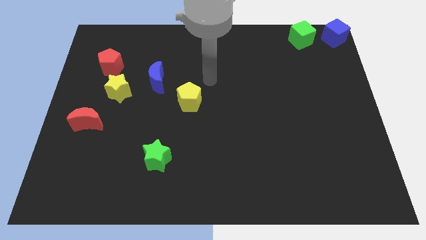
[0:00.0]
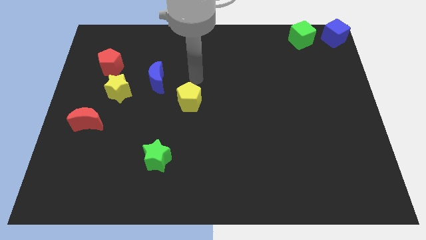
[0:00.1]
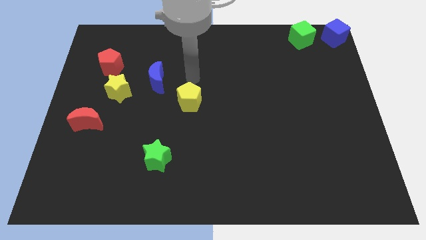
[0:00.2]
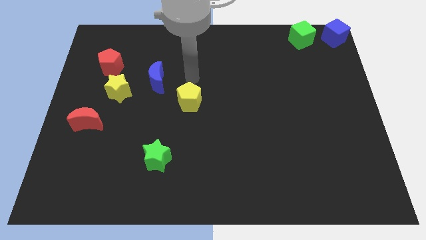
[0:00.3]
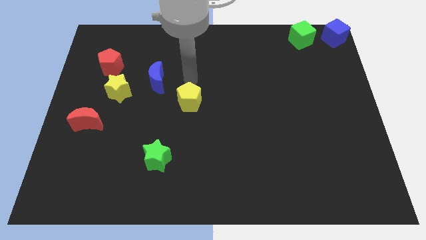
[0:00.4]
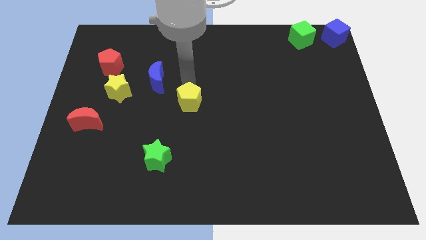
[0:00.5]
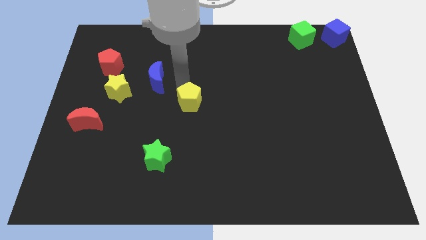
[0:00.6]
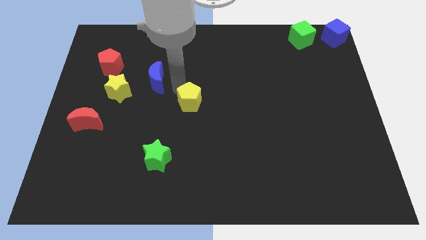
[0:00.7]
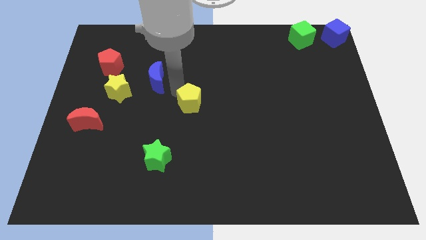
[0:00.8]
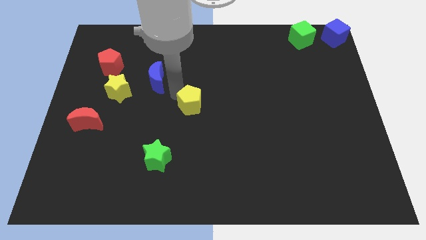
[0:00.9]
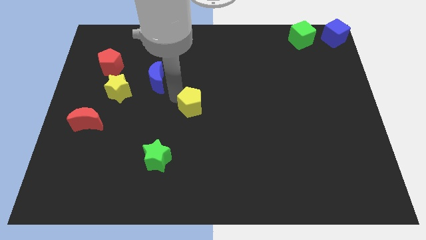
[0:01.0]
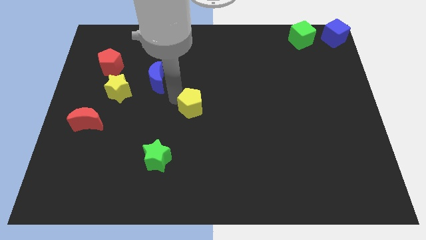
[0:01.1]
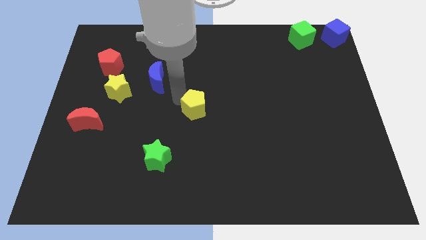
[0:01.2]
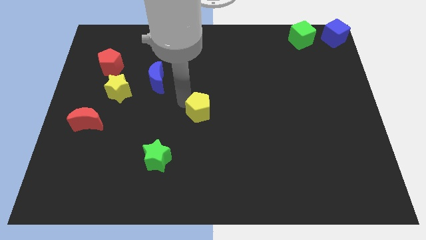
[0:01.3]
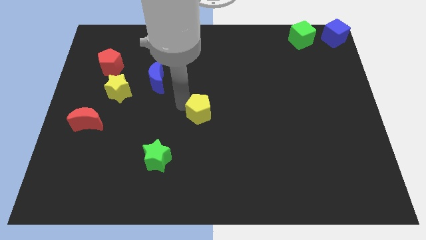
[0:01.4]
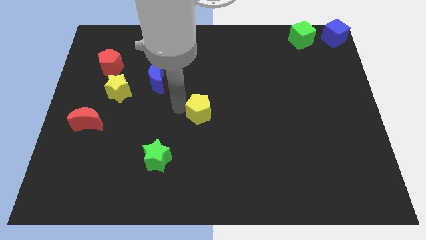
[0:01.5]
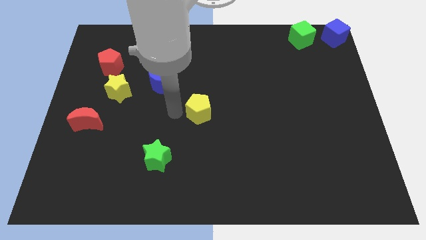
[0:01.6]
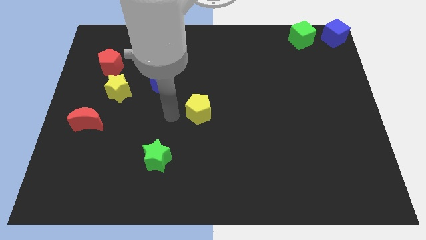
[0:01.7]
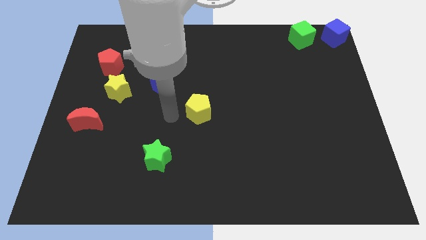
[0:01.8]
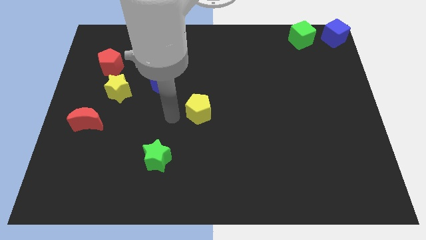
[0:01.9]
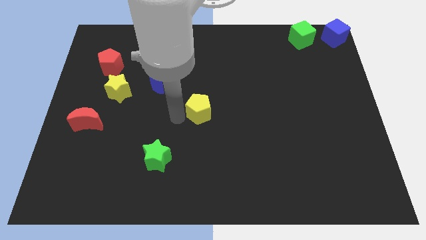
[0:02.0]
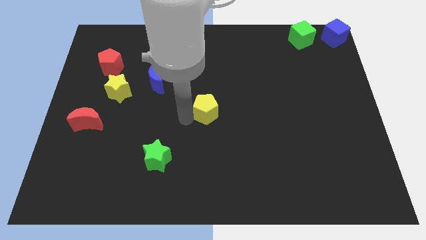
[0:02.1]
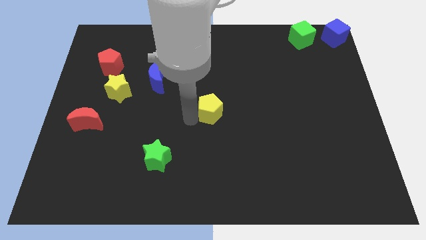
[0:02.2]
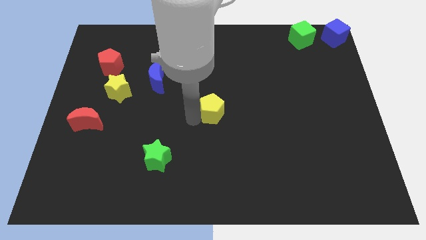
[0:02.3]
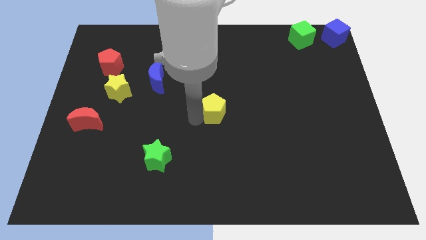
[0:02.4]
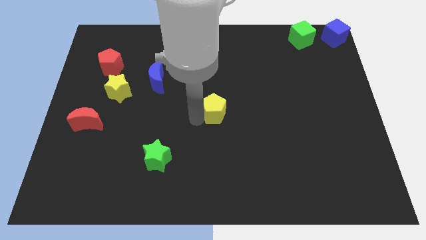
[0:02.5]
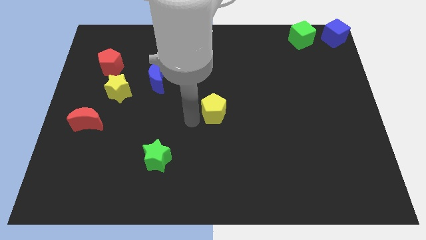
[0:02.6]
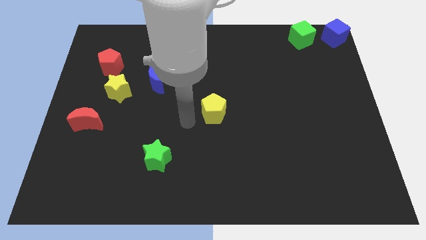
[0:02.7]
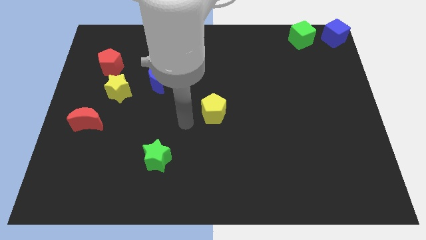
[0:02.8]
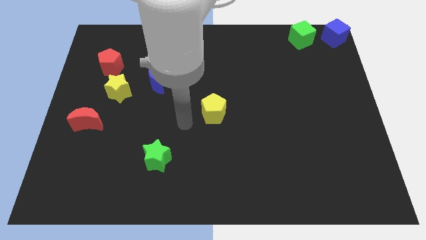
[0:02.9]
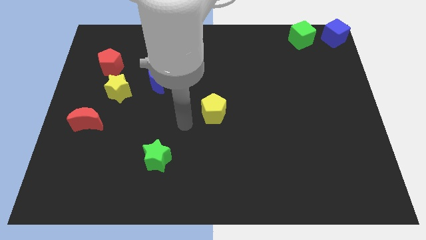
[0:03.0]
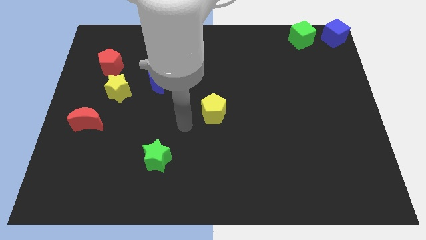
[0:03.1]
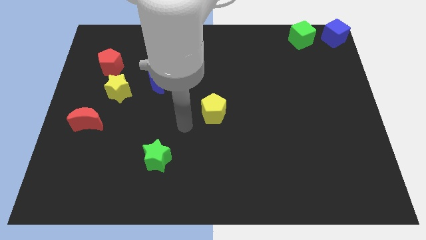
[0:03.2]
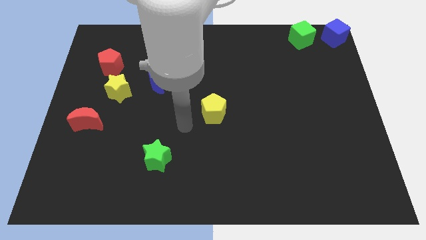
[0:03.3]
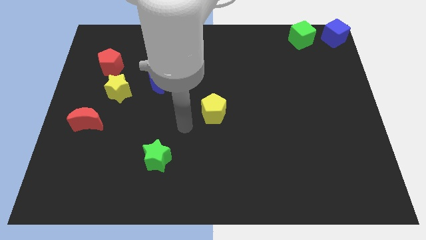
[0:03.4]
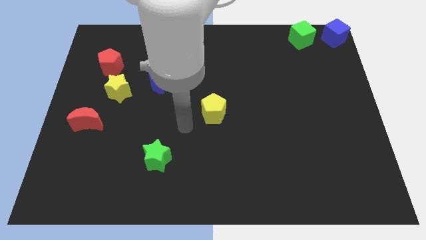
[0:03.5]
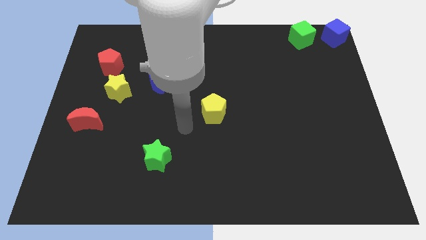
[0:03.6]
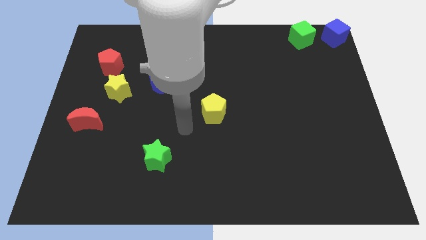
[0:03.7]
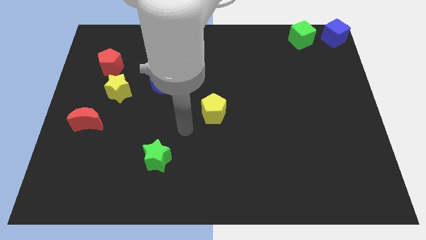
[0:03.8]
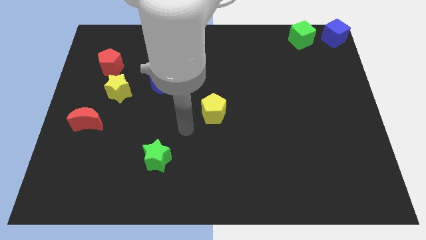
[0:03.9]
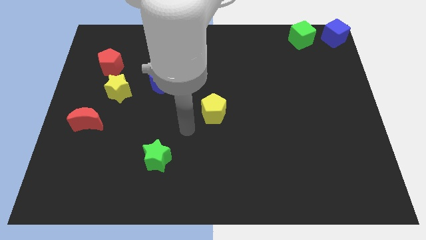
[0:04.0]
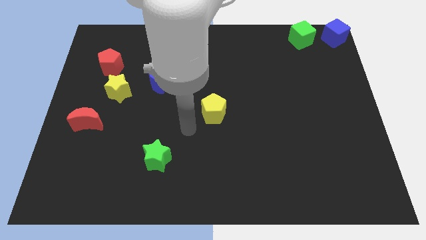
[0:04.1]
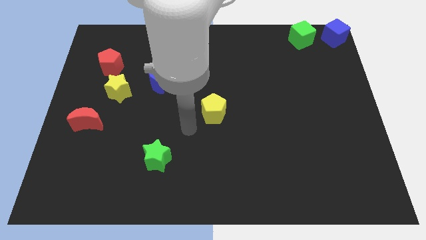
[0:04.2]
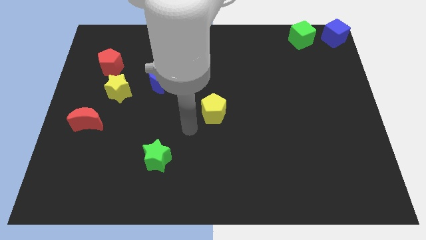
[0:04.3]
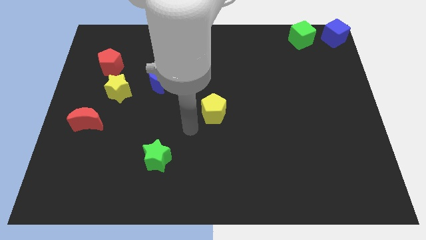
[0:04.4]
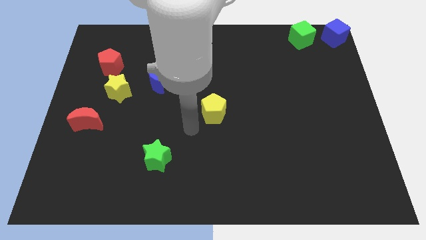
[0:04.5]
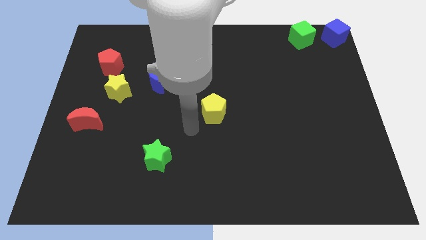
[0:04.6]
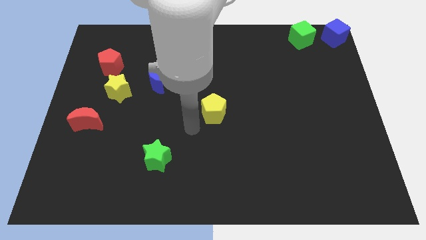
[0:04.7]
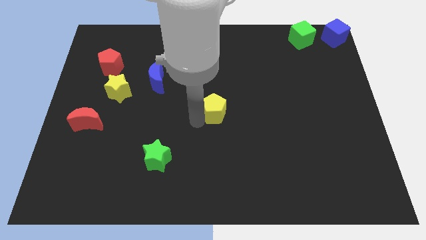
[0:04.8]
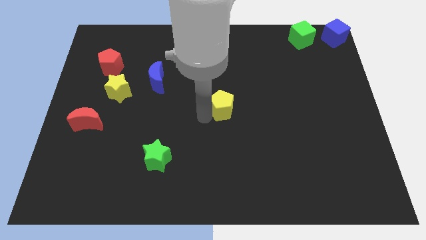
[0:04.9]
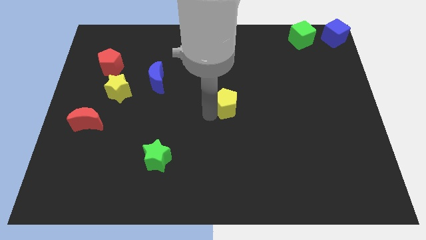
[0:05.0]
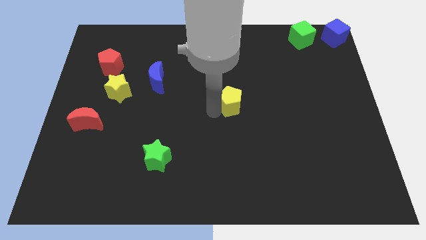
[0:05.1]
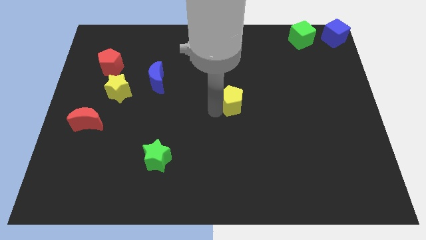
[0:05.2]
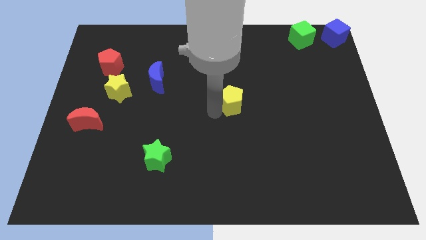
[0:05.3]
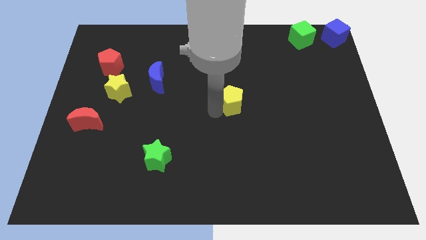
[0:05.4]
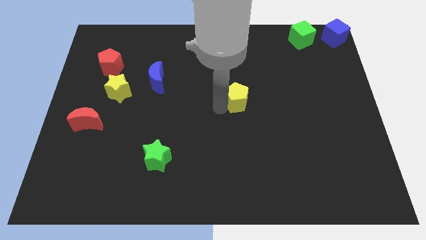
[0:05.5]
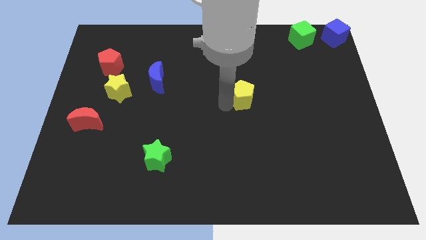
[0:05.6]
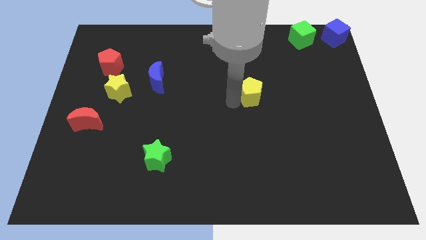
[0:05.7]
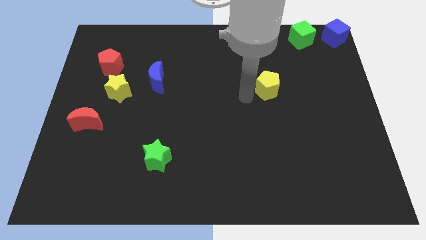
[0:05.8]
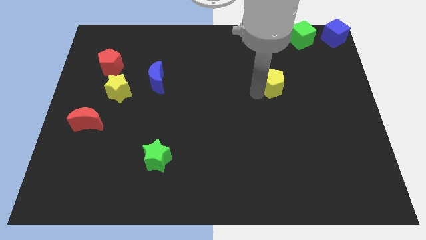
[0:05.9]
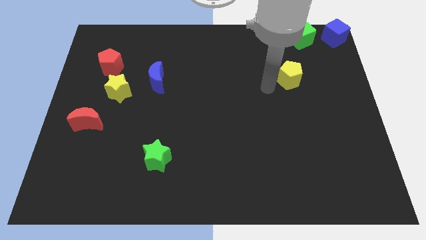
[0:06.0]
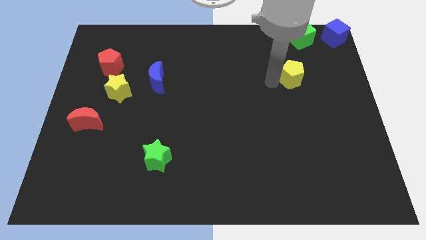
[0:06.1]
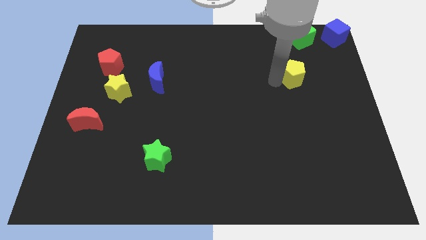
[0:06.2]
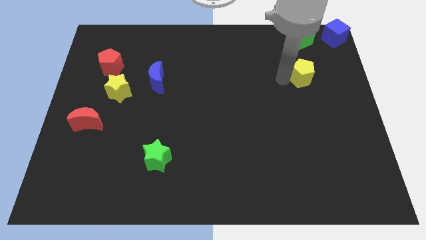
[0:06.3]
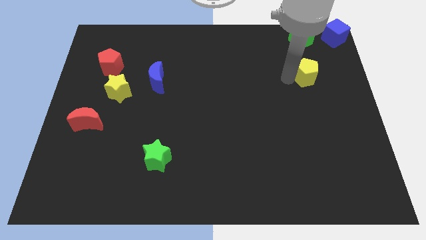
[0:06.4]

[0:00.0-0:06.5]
put the yellow pentagon below the green cube

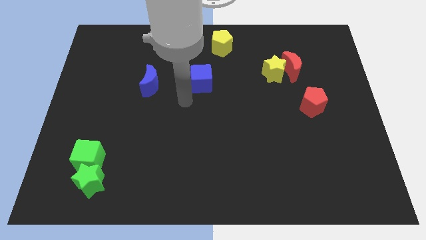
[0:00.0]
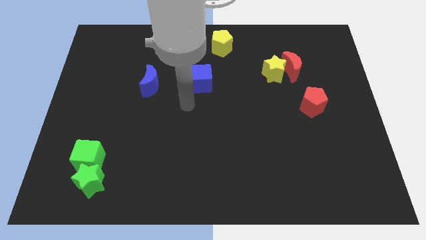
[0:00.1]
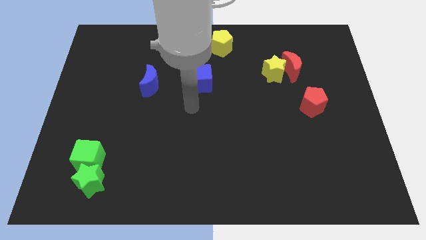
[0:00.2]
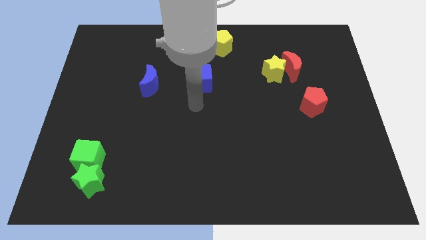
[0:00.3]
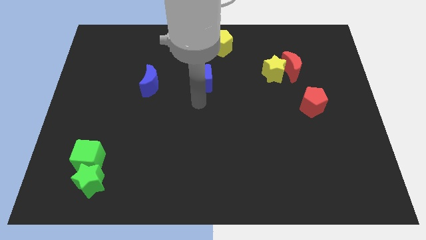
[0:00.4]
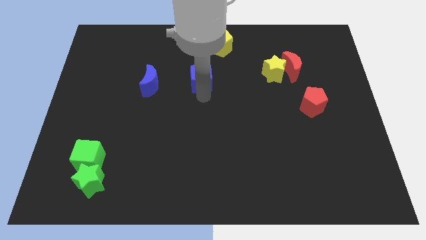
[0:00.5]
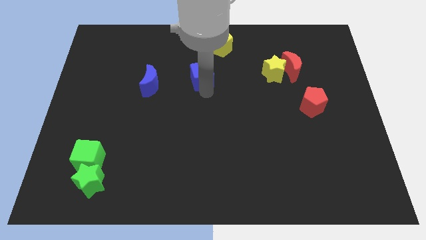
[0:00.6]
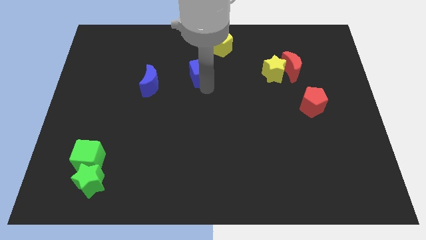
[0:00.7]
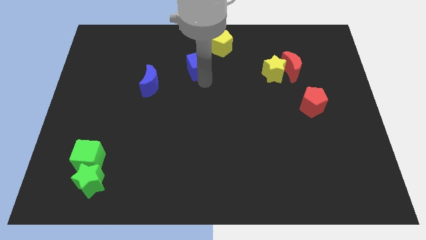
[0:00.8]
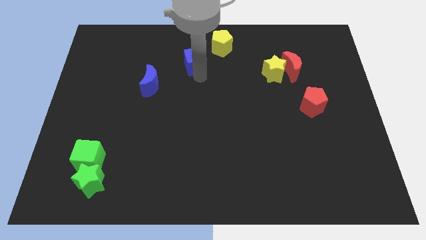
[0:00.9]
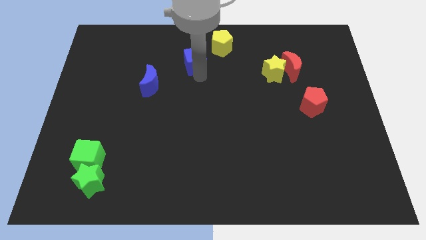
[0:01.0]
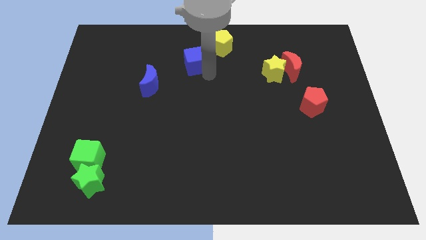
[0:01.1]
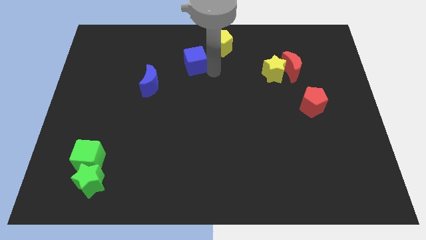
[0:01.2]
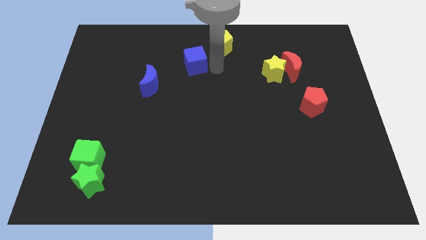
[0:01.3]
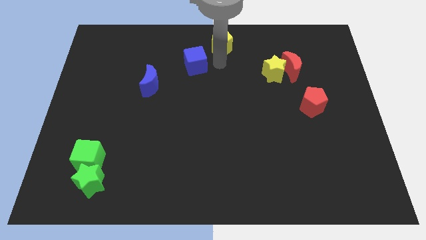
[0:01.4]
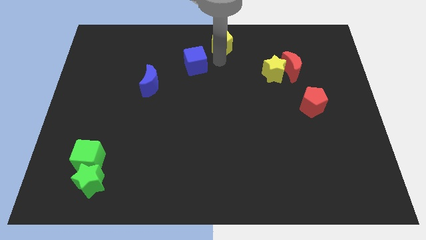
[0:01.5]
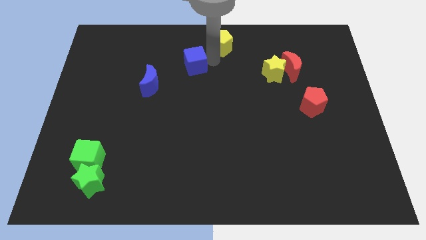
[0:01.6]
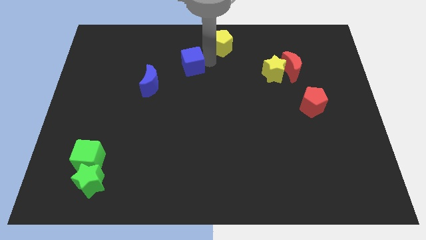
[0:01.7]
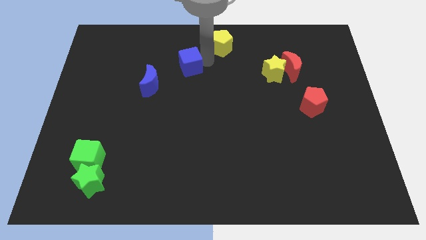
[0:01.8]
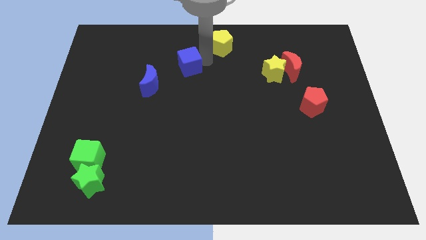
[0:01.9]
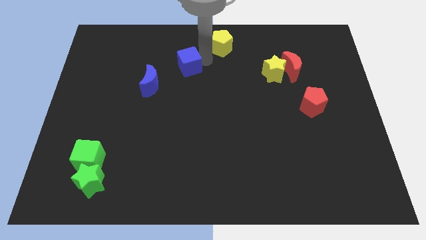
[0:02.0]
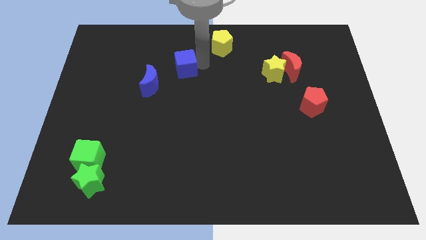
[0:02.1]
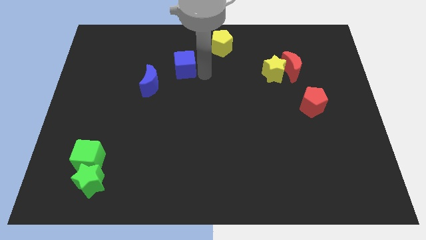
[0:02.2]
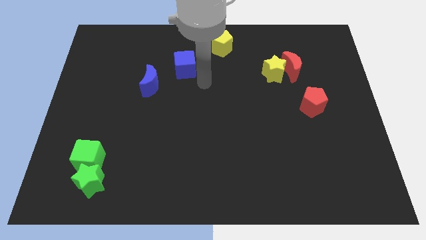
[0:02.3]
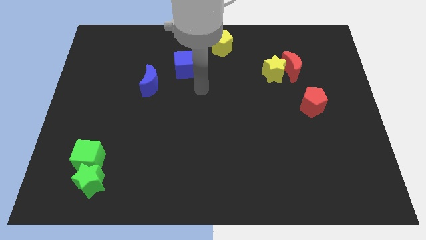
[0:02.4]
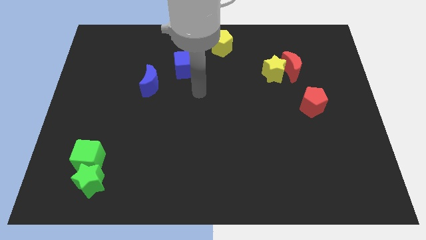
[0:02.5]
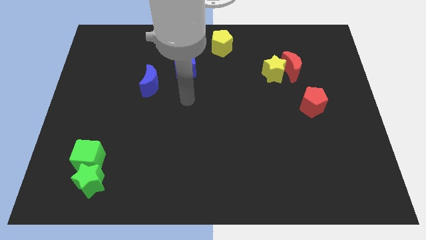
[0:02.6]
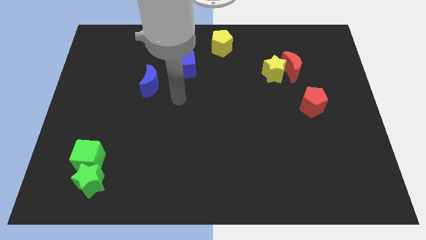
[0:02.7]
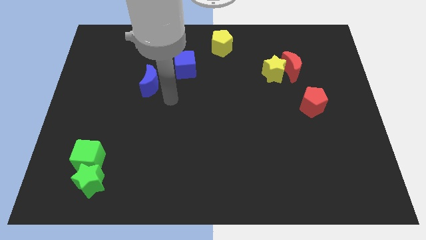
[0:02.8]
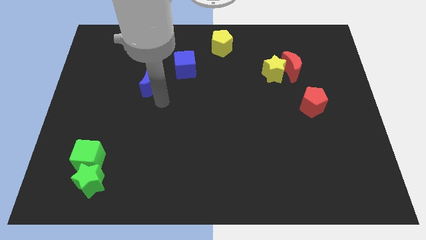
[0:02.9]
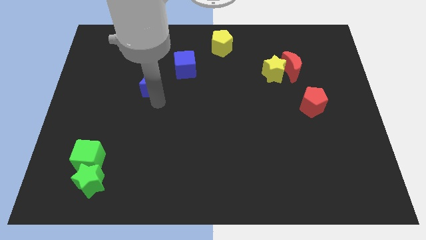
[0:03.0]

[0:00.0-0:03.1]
move the blue cube to the top right of the blue moon
